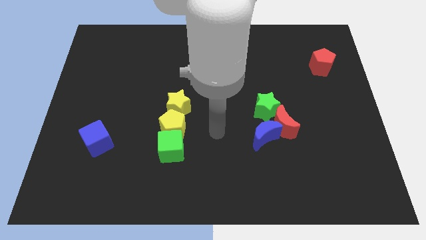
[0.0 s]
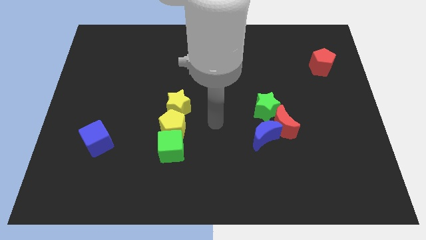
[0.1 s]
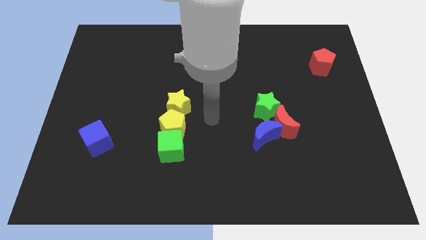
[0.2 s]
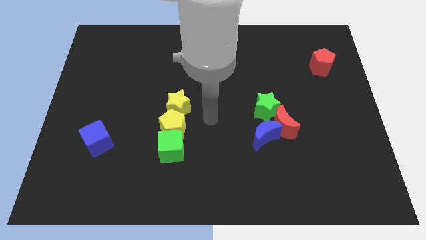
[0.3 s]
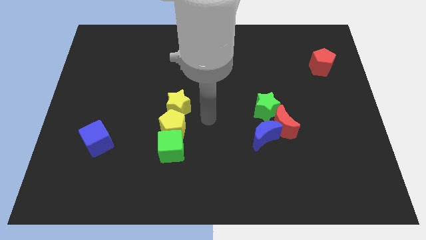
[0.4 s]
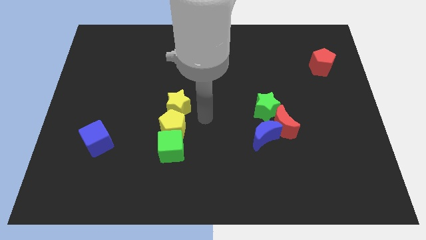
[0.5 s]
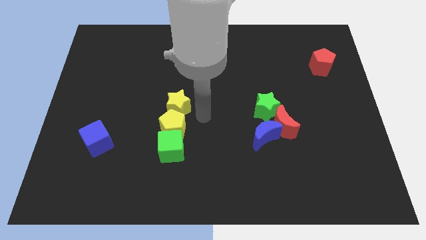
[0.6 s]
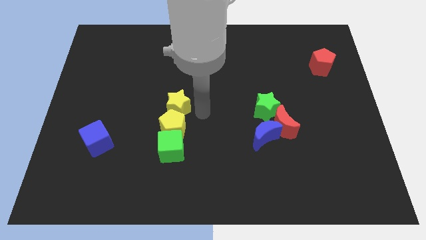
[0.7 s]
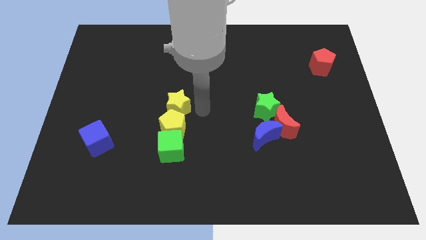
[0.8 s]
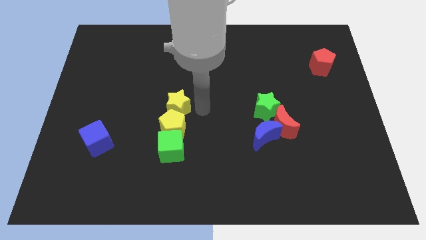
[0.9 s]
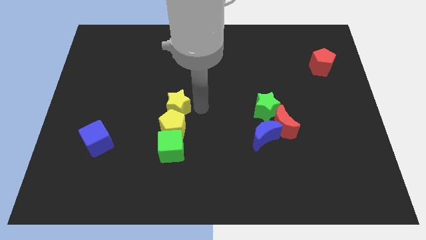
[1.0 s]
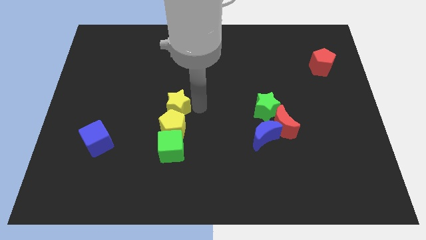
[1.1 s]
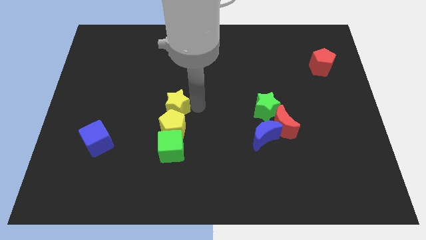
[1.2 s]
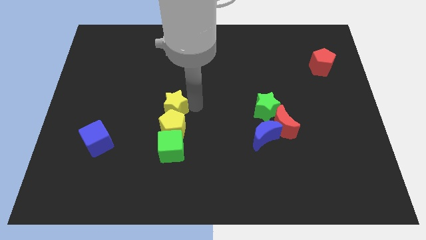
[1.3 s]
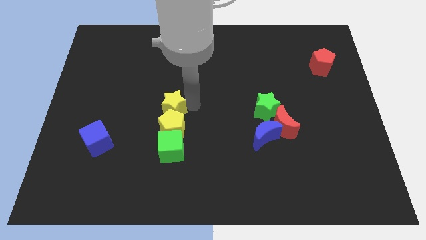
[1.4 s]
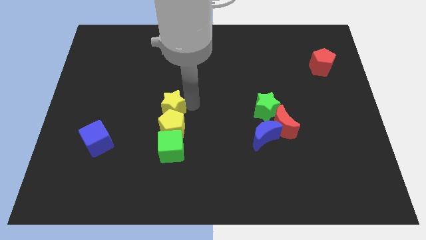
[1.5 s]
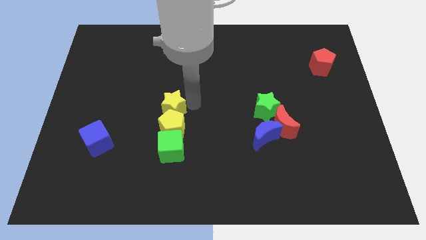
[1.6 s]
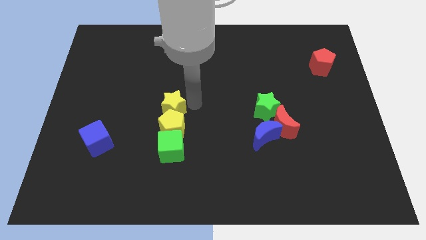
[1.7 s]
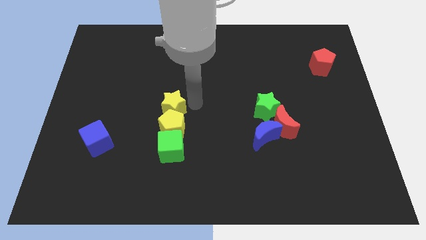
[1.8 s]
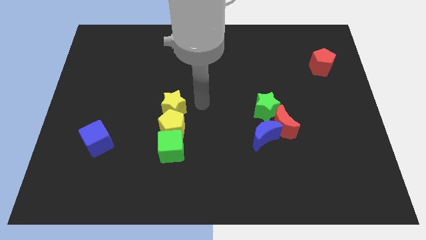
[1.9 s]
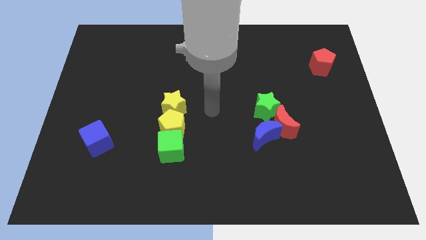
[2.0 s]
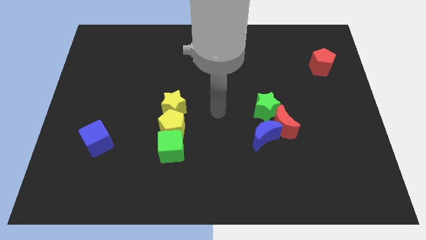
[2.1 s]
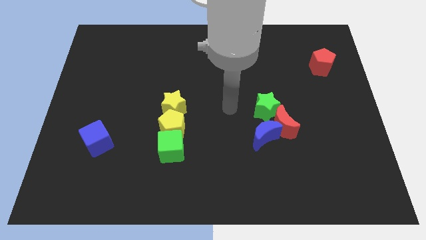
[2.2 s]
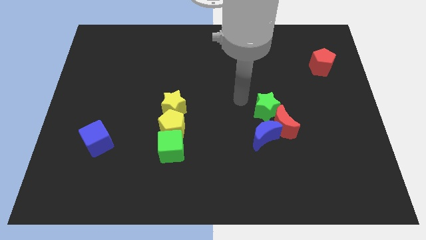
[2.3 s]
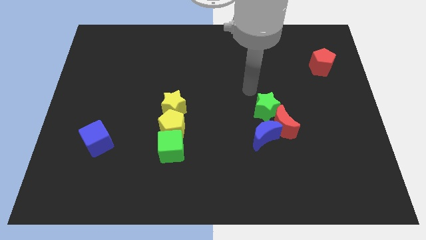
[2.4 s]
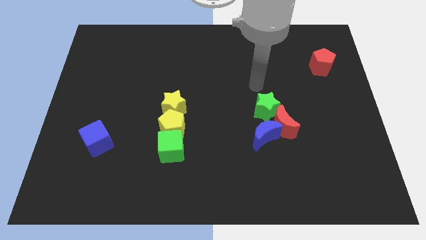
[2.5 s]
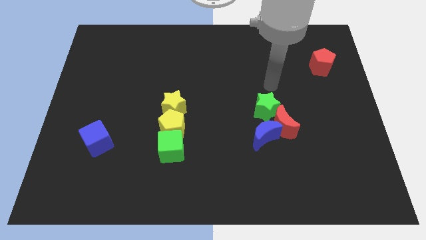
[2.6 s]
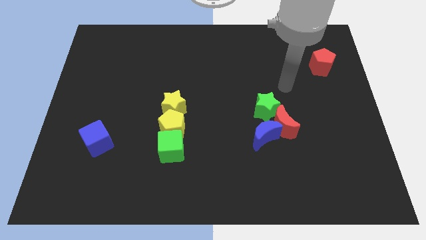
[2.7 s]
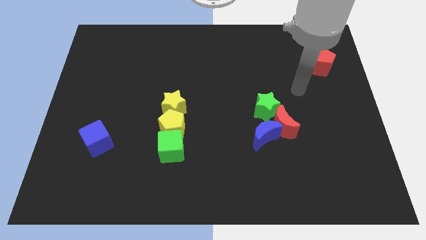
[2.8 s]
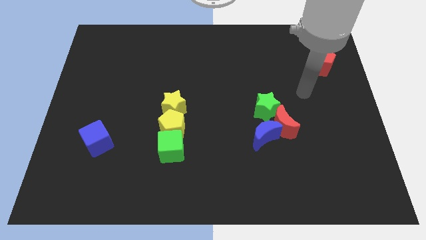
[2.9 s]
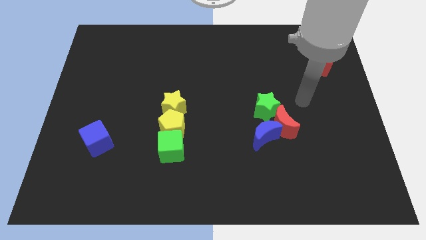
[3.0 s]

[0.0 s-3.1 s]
tap the right side of the yellow star

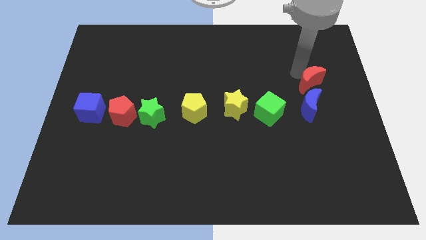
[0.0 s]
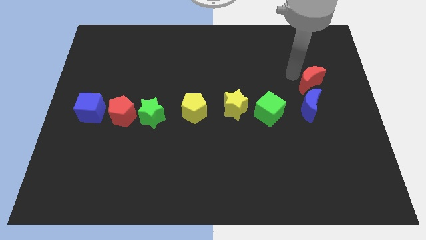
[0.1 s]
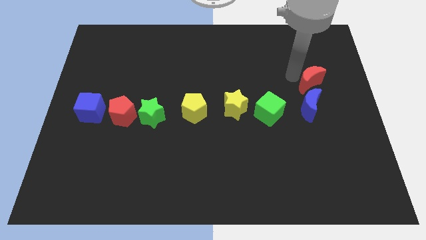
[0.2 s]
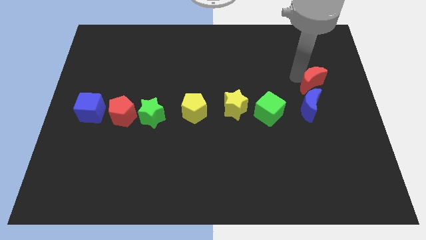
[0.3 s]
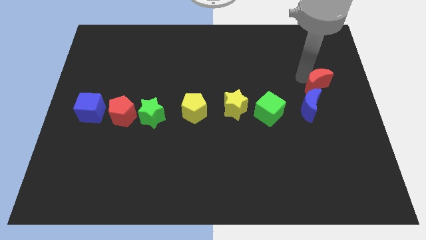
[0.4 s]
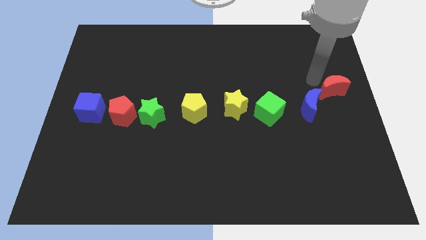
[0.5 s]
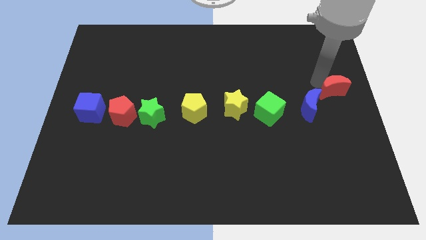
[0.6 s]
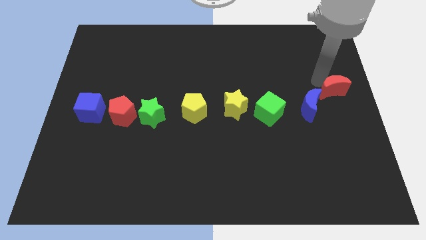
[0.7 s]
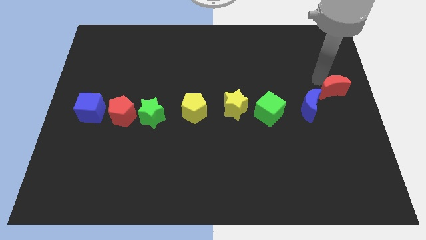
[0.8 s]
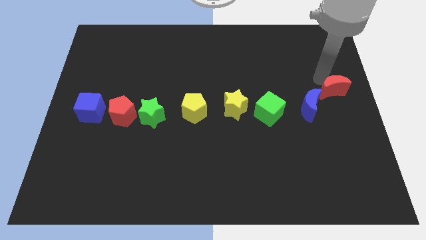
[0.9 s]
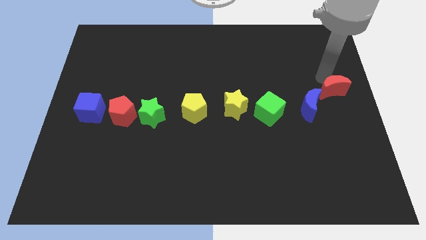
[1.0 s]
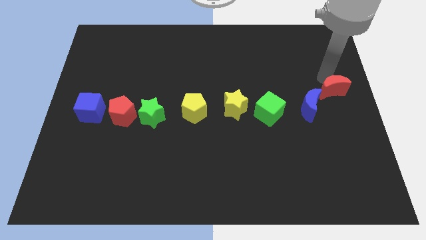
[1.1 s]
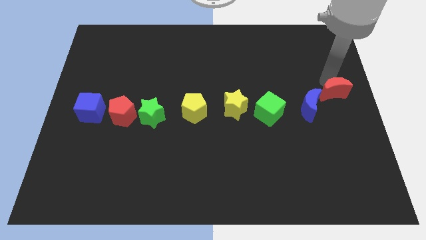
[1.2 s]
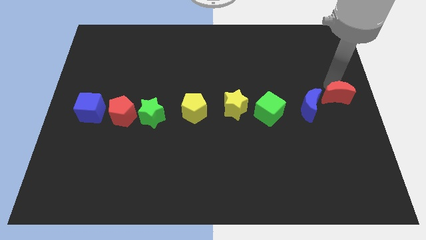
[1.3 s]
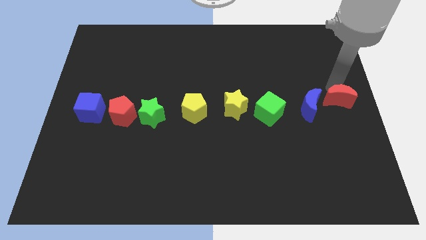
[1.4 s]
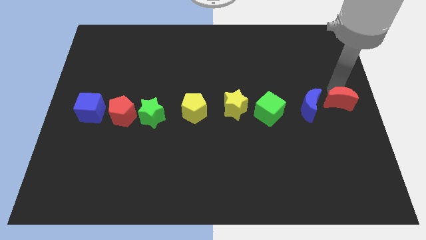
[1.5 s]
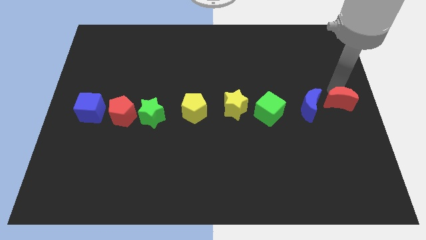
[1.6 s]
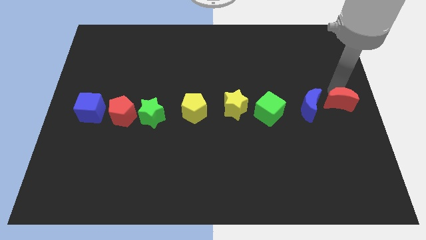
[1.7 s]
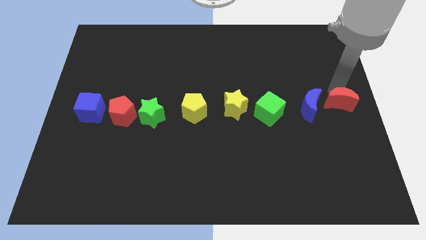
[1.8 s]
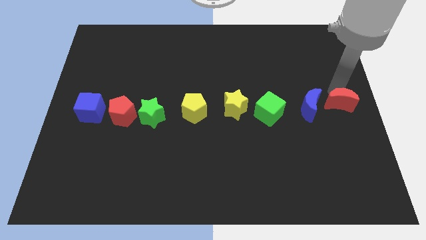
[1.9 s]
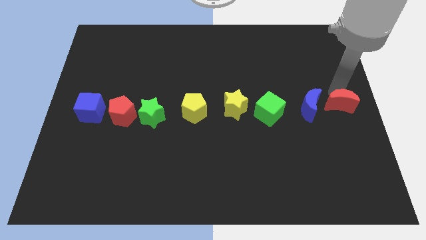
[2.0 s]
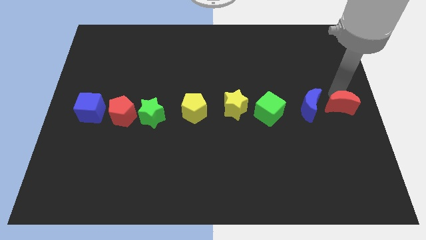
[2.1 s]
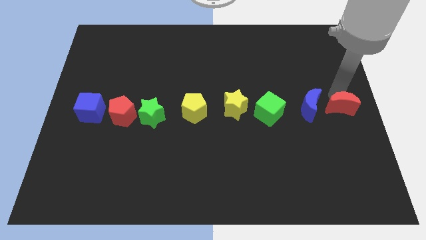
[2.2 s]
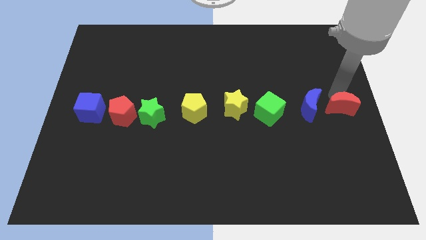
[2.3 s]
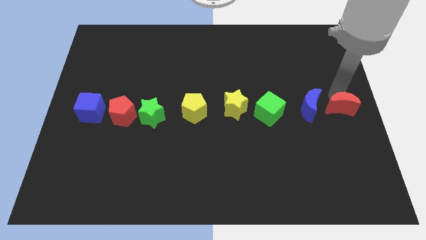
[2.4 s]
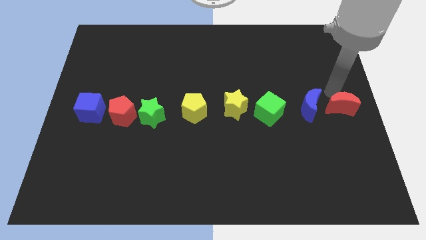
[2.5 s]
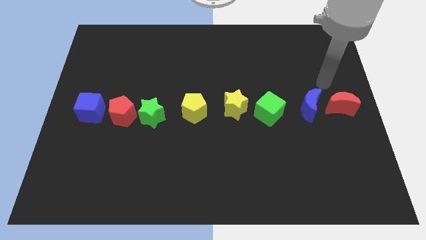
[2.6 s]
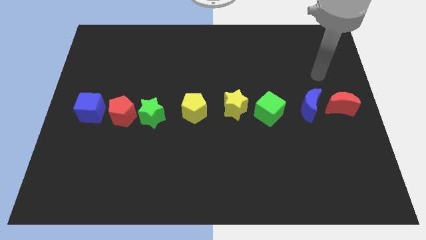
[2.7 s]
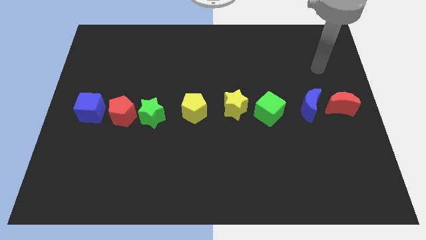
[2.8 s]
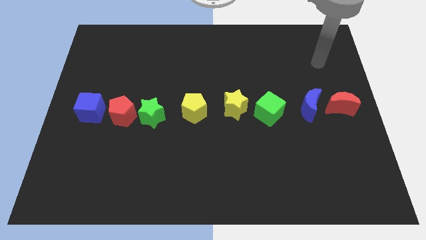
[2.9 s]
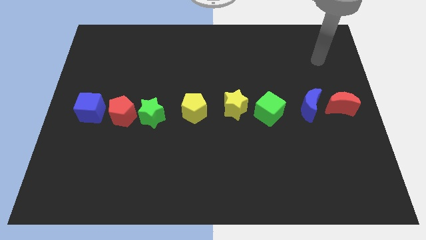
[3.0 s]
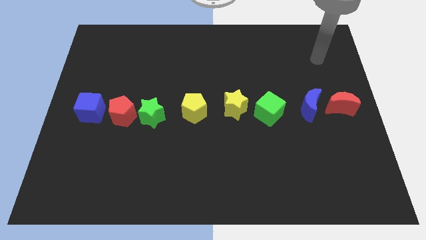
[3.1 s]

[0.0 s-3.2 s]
place the red crescent to the right of the blue moon to make a horizontal line

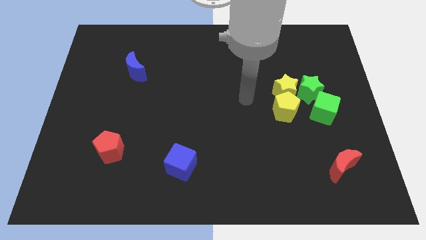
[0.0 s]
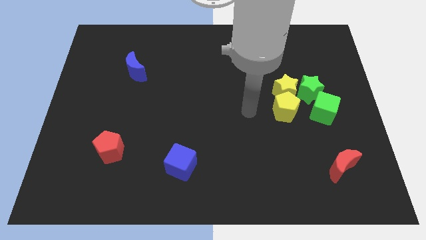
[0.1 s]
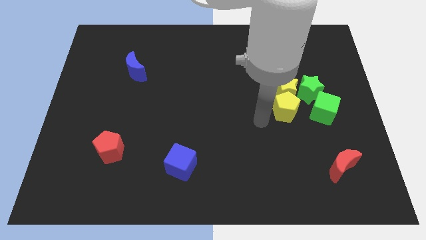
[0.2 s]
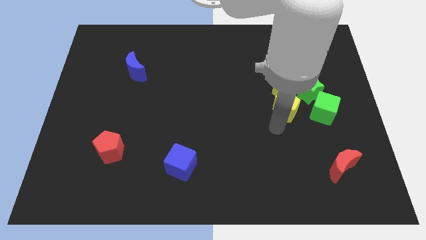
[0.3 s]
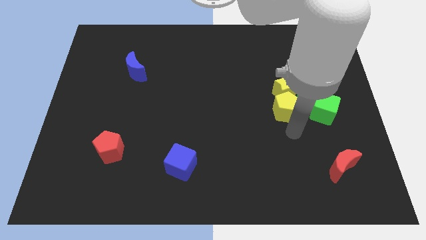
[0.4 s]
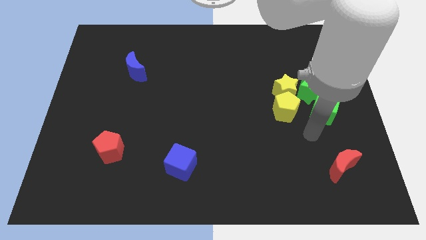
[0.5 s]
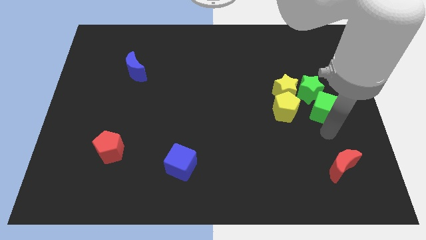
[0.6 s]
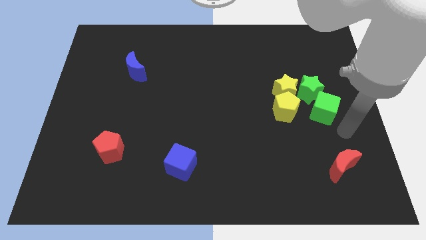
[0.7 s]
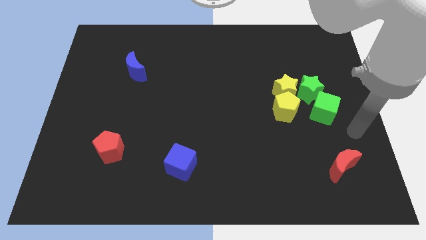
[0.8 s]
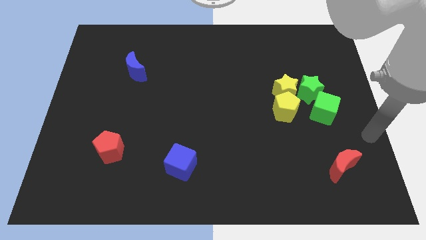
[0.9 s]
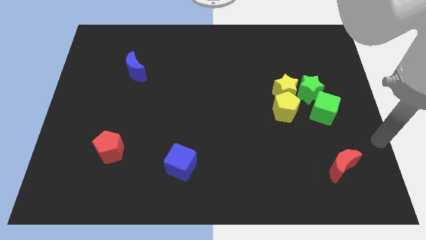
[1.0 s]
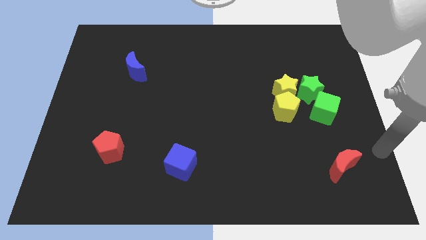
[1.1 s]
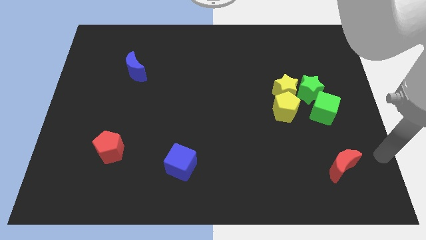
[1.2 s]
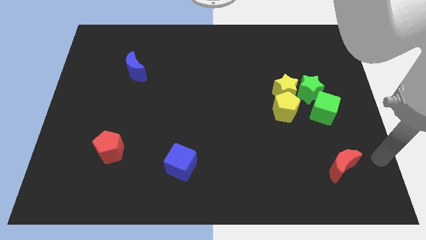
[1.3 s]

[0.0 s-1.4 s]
move your arm towards bottom right

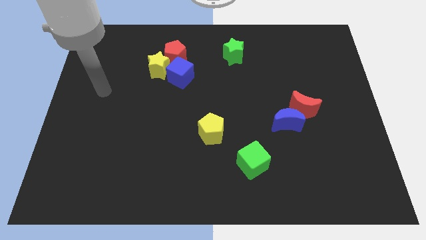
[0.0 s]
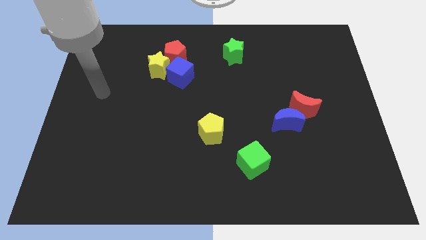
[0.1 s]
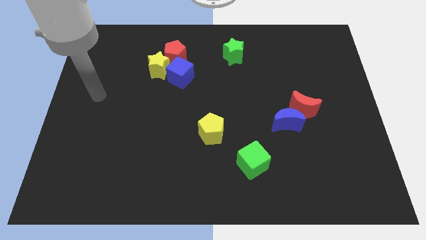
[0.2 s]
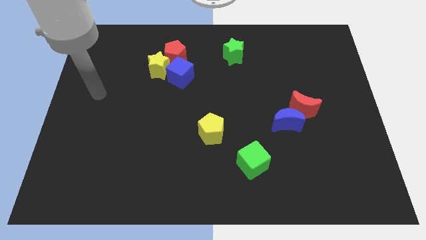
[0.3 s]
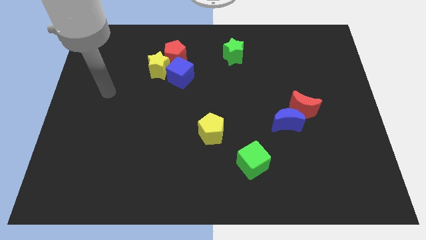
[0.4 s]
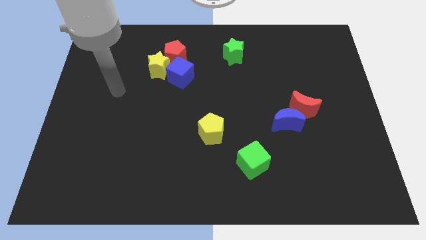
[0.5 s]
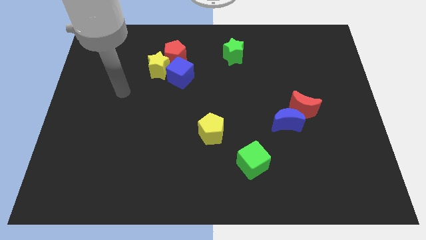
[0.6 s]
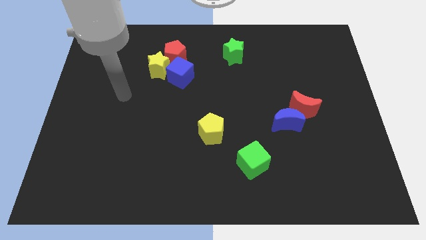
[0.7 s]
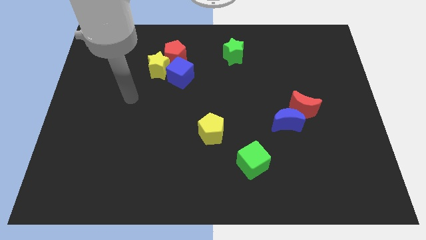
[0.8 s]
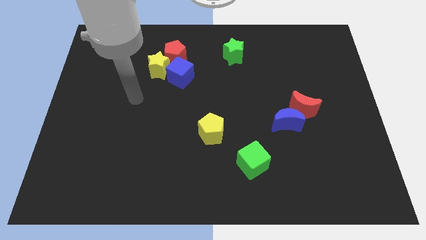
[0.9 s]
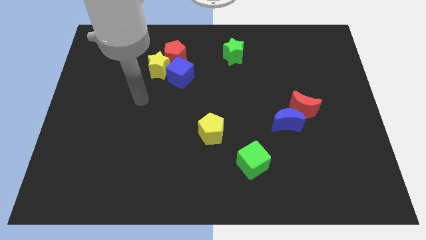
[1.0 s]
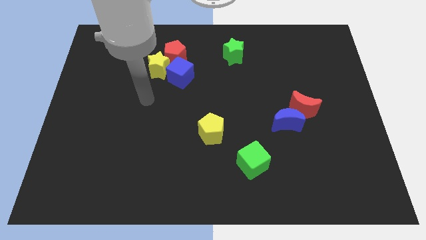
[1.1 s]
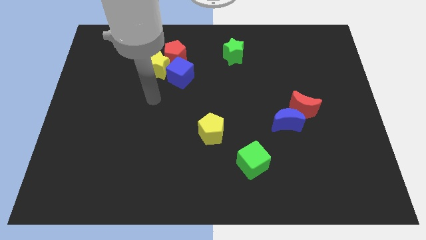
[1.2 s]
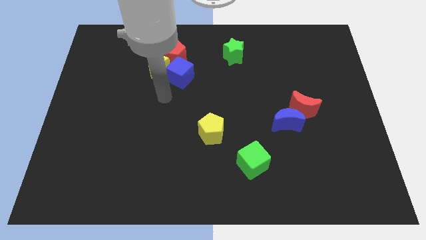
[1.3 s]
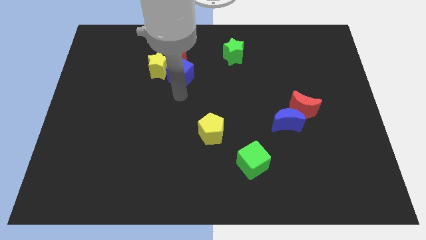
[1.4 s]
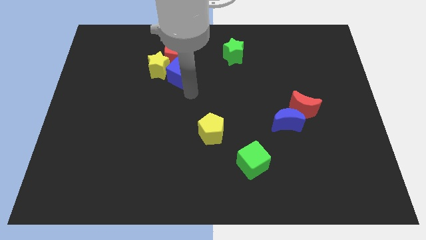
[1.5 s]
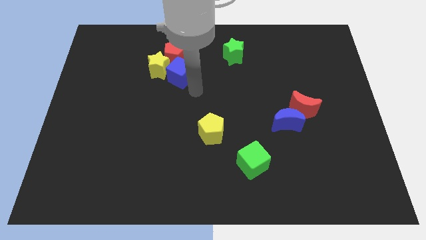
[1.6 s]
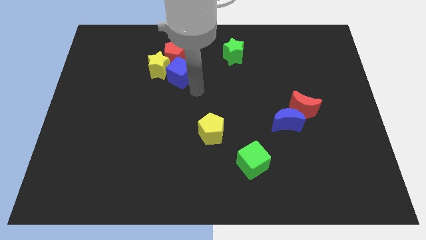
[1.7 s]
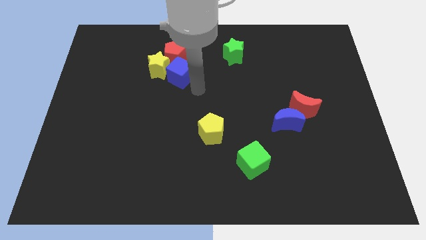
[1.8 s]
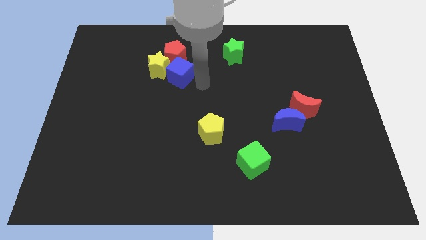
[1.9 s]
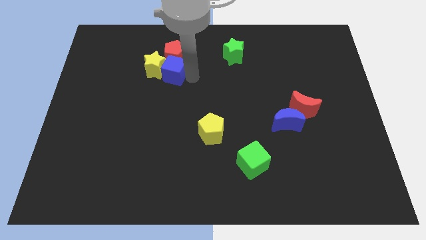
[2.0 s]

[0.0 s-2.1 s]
slightly touch the blue cube
